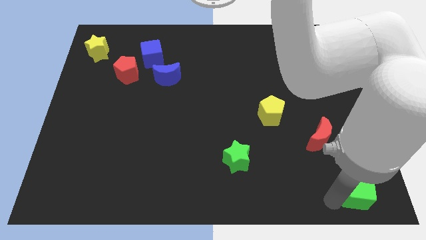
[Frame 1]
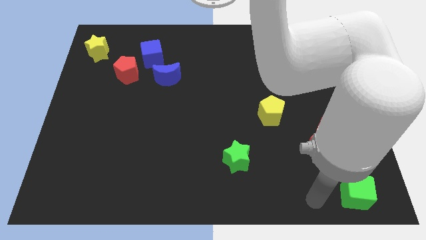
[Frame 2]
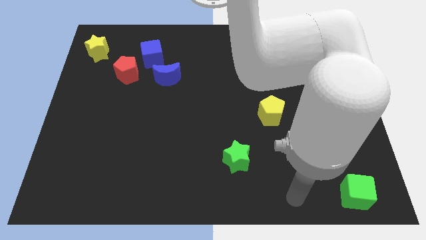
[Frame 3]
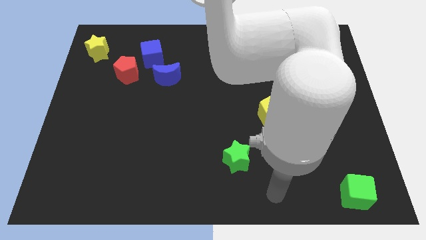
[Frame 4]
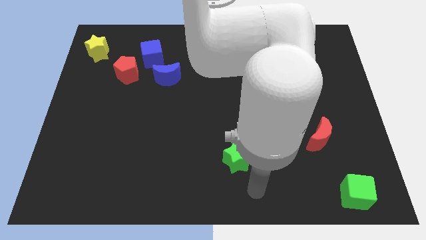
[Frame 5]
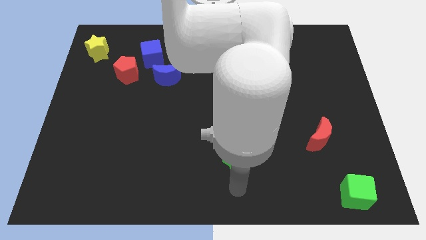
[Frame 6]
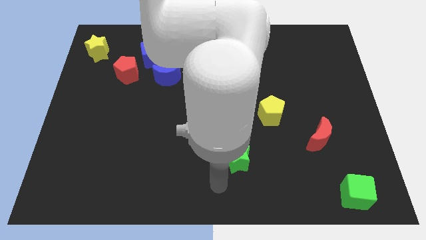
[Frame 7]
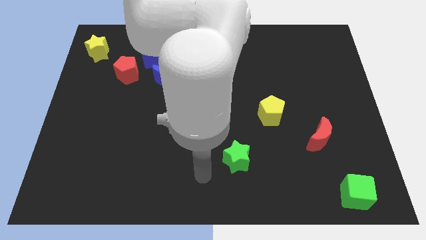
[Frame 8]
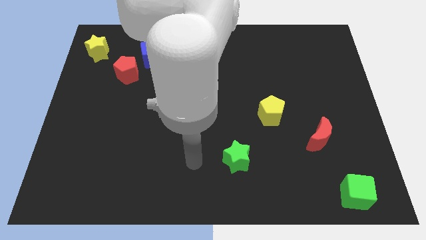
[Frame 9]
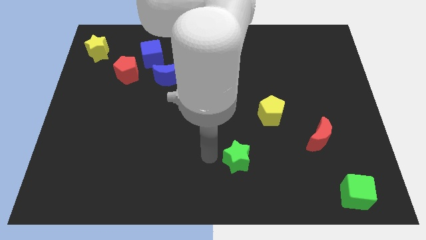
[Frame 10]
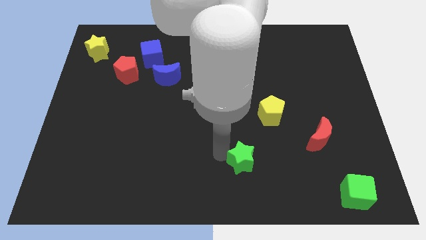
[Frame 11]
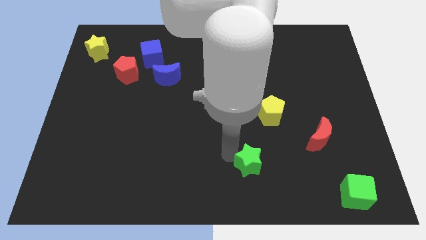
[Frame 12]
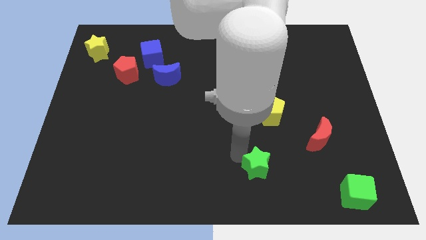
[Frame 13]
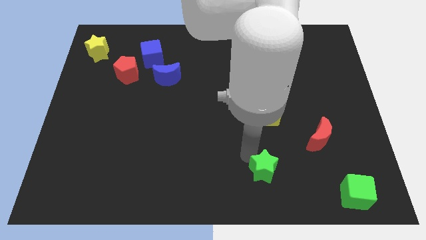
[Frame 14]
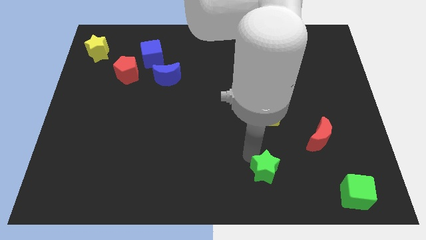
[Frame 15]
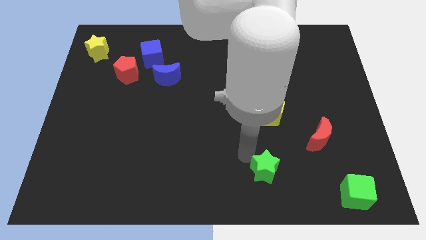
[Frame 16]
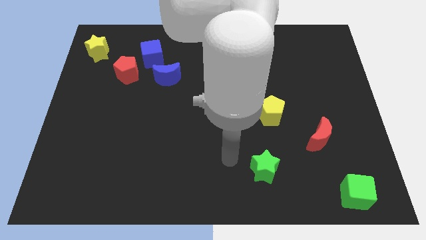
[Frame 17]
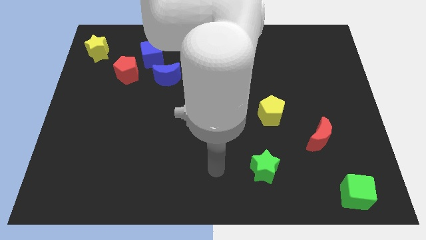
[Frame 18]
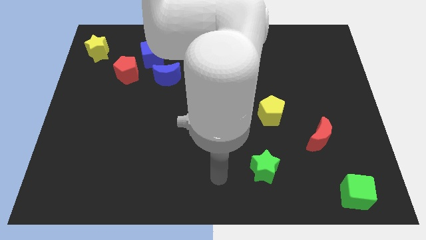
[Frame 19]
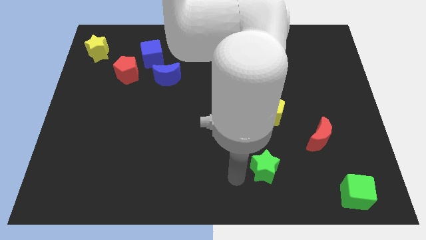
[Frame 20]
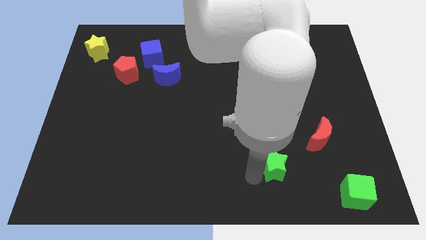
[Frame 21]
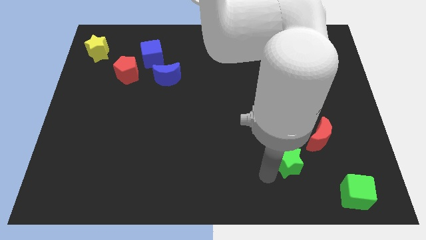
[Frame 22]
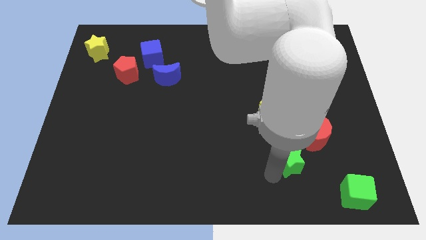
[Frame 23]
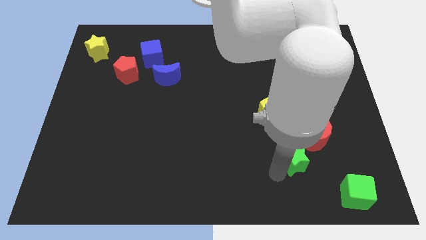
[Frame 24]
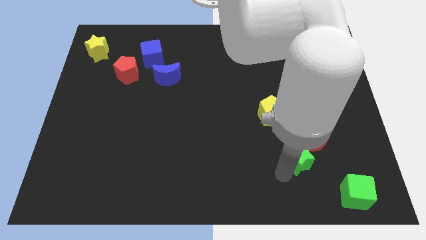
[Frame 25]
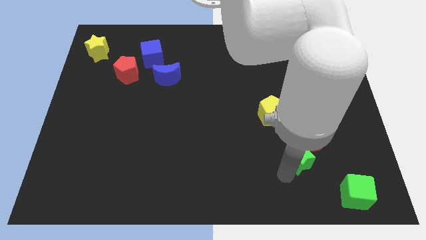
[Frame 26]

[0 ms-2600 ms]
place the green star below the red moon

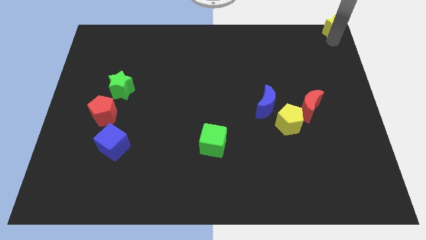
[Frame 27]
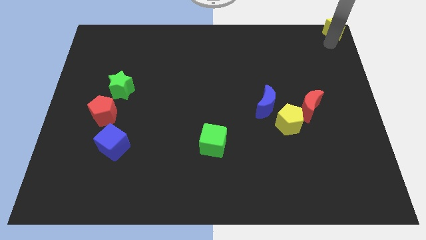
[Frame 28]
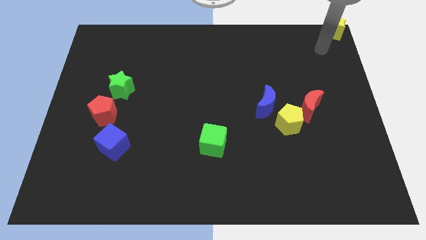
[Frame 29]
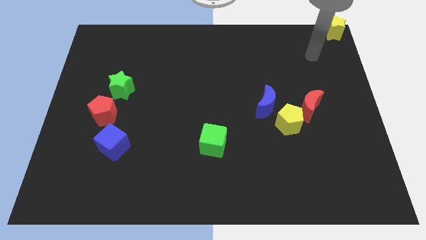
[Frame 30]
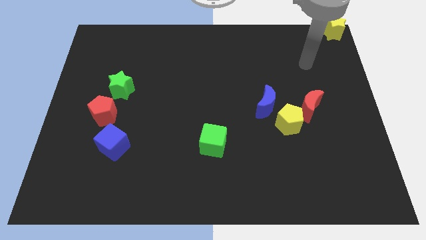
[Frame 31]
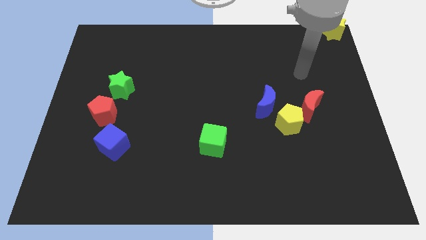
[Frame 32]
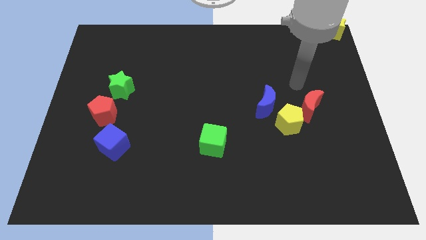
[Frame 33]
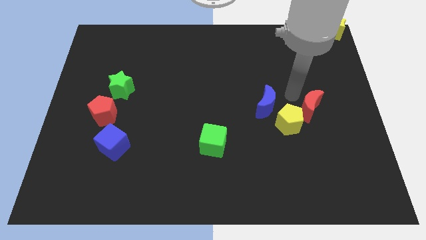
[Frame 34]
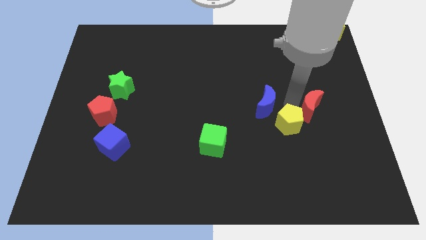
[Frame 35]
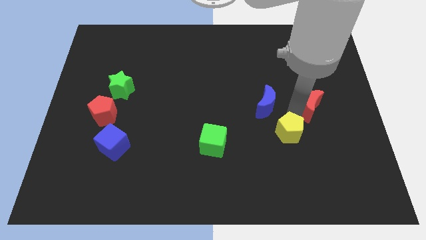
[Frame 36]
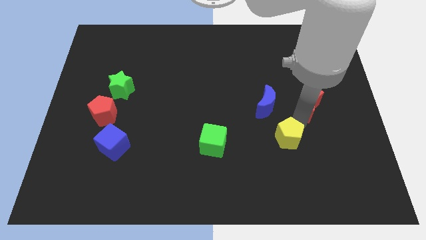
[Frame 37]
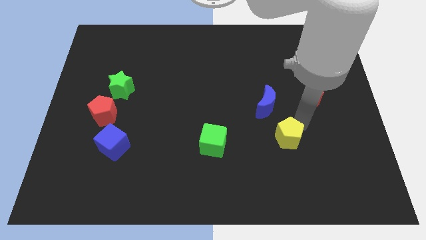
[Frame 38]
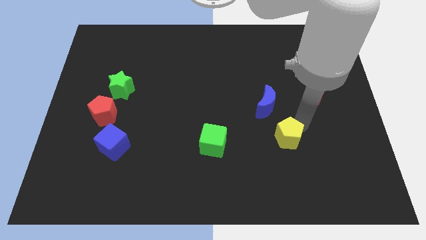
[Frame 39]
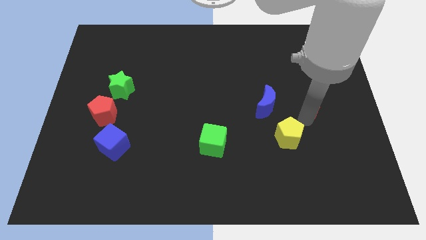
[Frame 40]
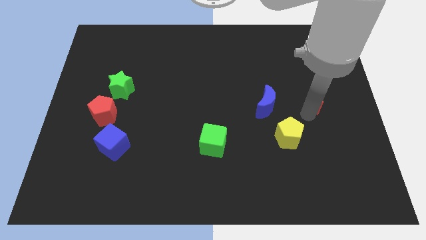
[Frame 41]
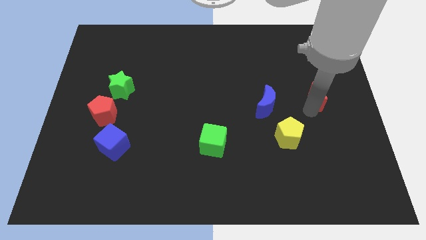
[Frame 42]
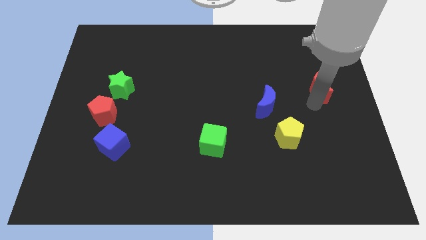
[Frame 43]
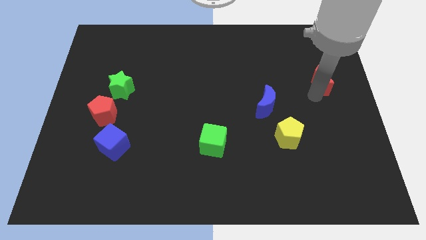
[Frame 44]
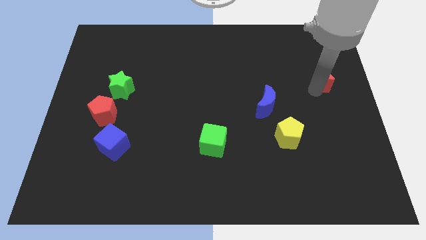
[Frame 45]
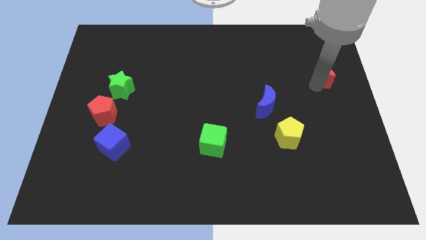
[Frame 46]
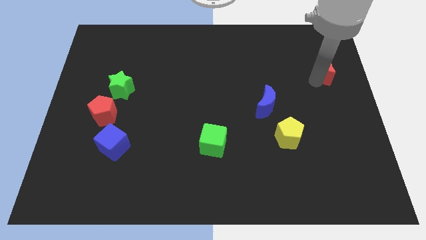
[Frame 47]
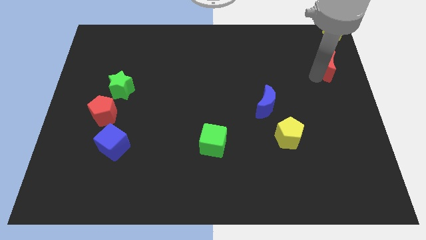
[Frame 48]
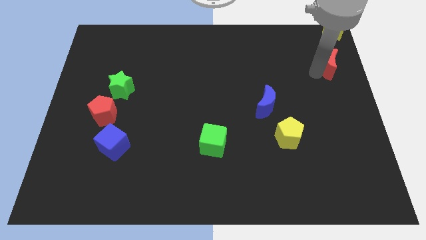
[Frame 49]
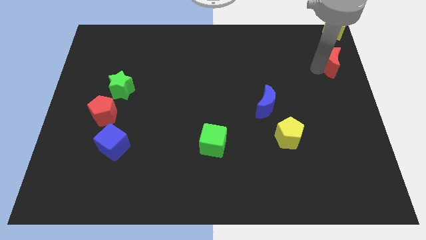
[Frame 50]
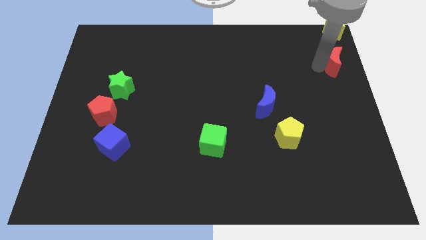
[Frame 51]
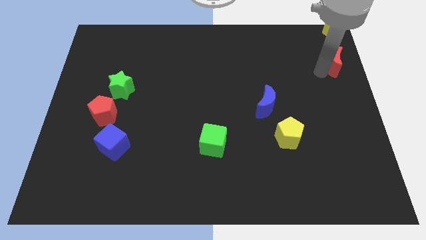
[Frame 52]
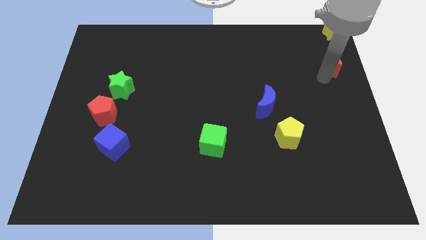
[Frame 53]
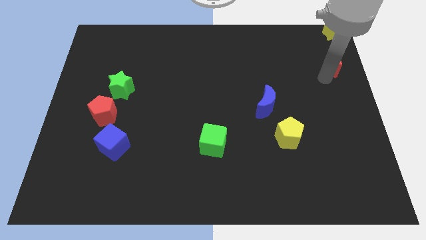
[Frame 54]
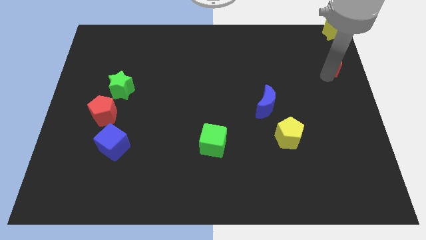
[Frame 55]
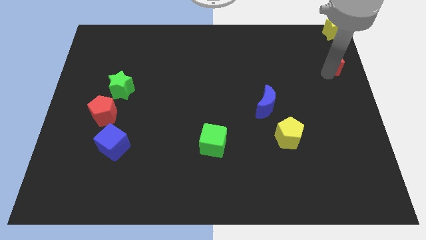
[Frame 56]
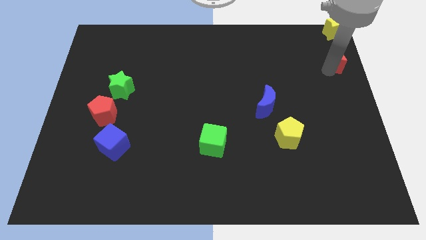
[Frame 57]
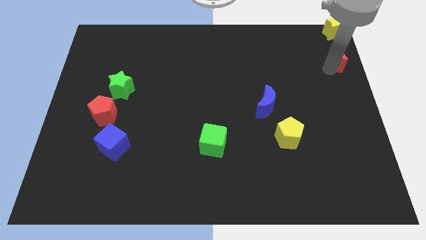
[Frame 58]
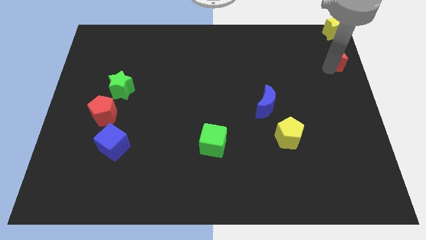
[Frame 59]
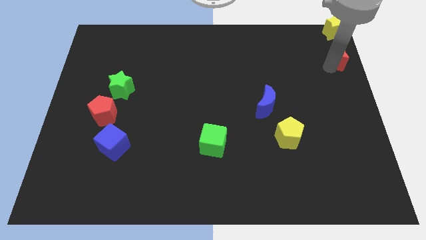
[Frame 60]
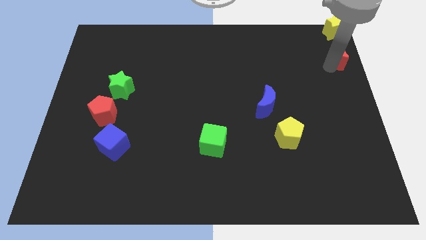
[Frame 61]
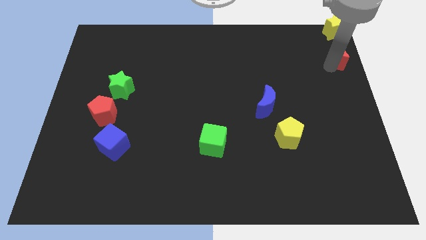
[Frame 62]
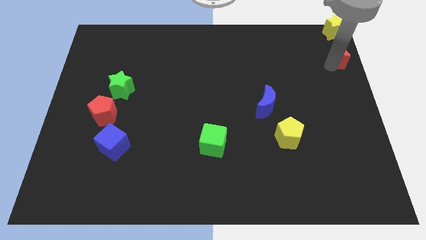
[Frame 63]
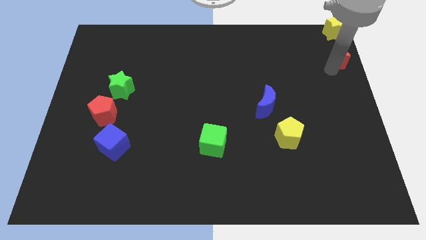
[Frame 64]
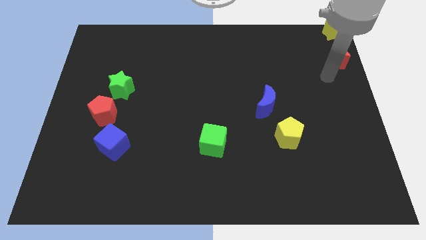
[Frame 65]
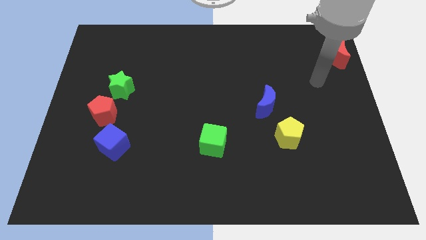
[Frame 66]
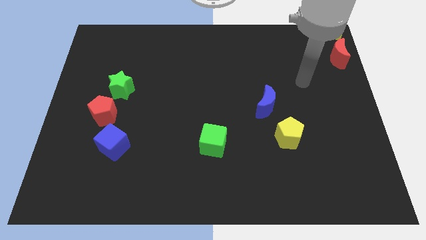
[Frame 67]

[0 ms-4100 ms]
move the red moon below the yellow star

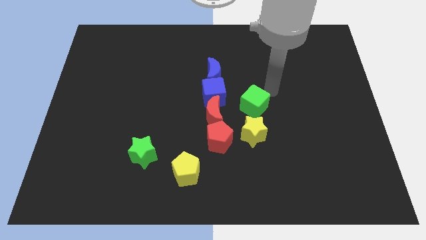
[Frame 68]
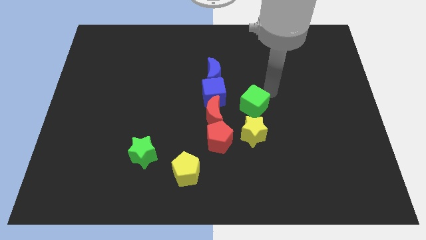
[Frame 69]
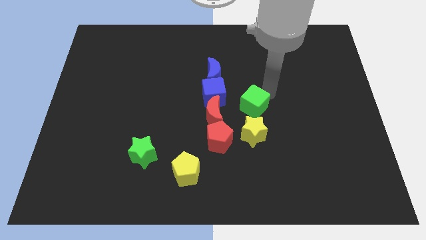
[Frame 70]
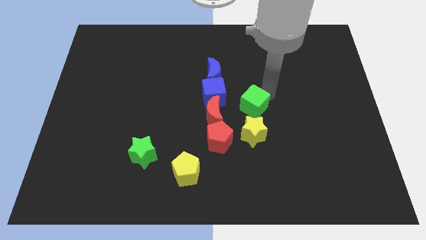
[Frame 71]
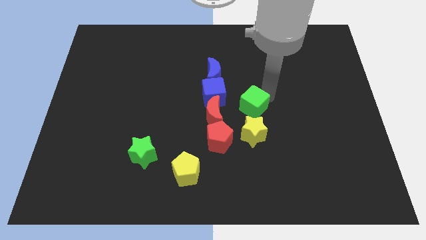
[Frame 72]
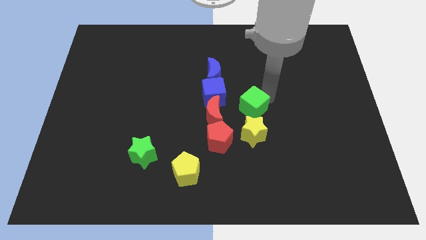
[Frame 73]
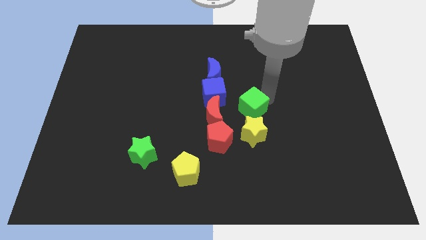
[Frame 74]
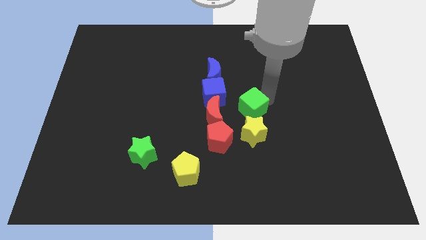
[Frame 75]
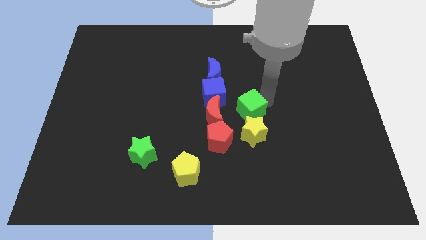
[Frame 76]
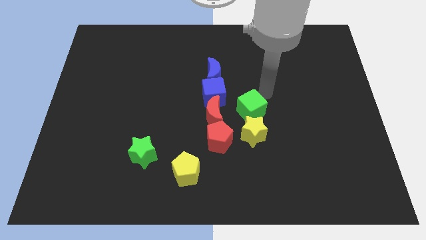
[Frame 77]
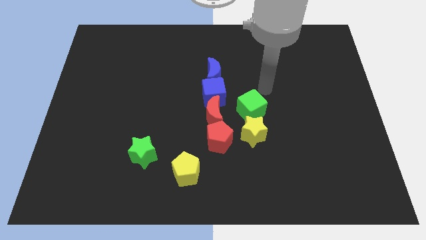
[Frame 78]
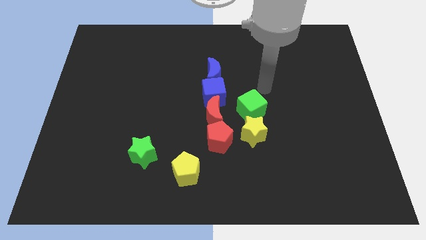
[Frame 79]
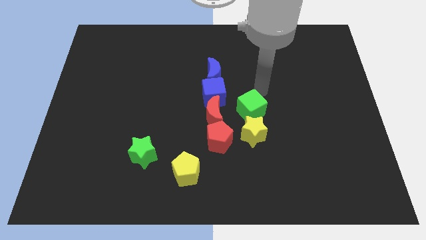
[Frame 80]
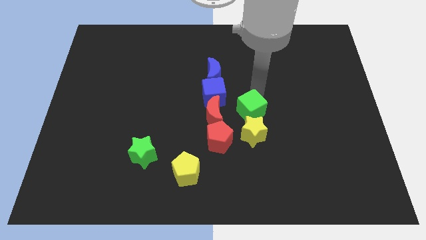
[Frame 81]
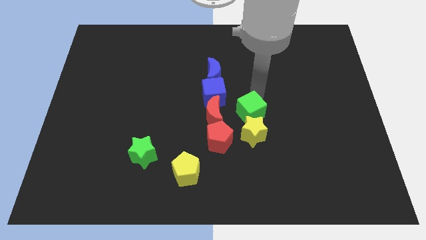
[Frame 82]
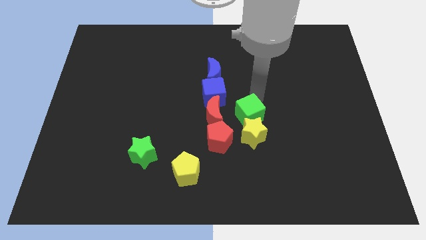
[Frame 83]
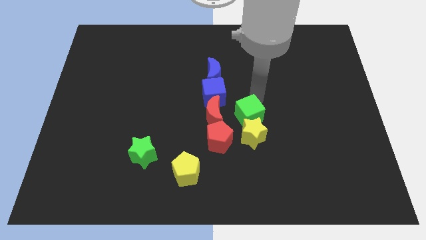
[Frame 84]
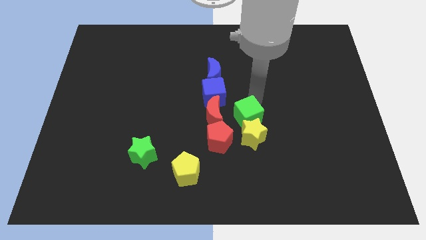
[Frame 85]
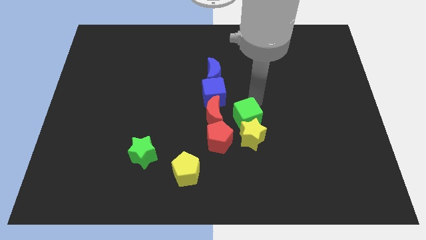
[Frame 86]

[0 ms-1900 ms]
push the green cube into the yellow star

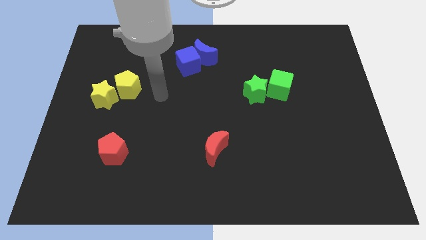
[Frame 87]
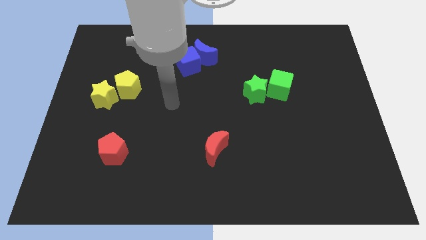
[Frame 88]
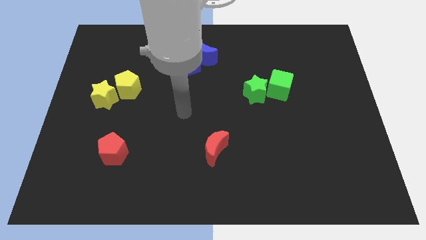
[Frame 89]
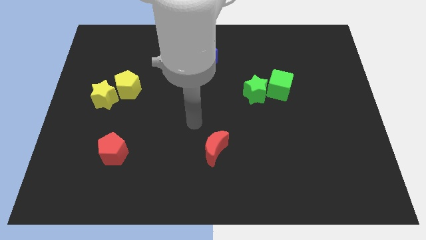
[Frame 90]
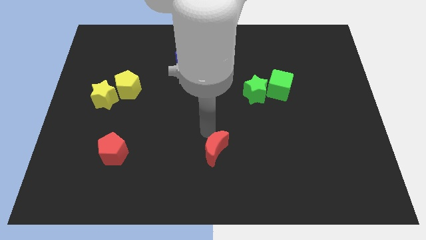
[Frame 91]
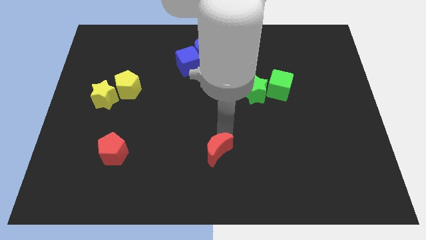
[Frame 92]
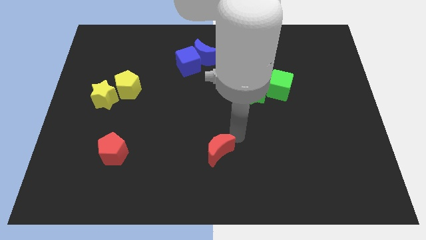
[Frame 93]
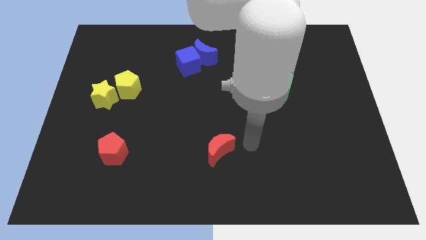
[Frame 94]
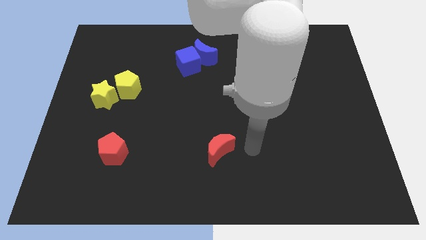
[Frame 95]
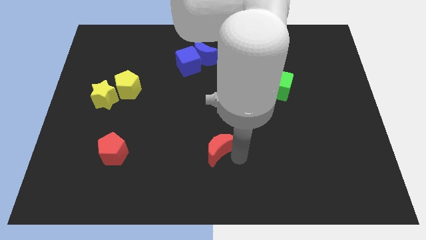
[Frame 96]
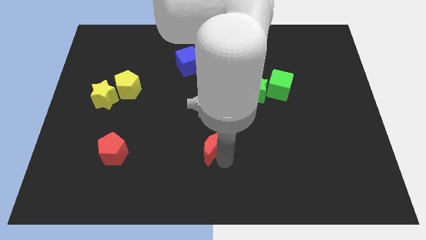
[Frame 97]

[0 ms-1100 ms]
drag the red crescent horizontally to the right side of the red pentagon
